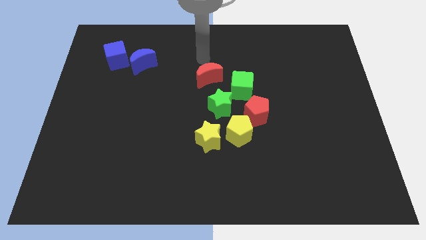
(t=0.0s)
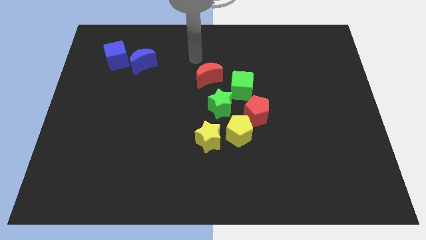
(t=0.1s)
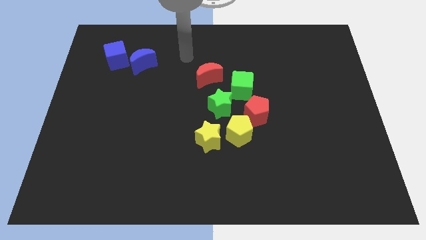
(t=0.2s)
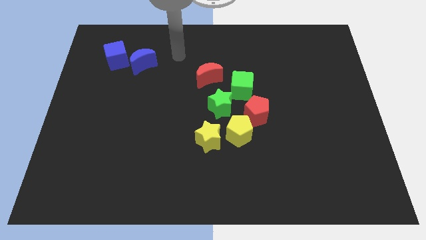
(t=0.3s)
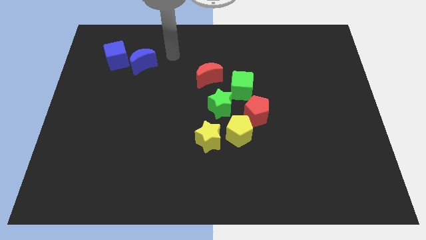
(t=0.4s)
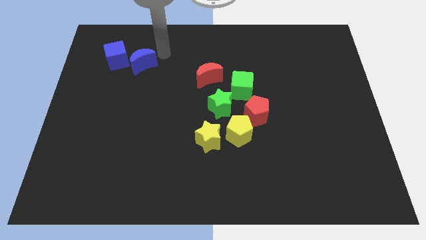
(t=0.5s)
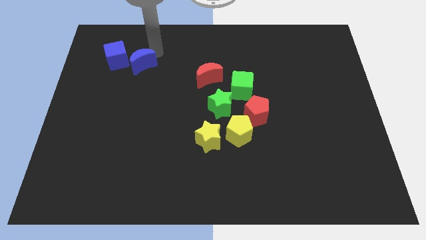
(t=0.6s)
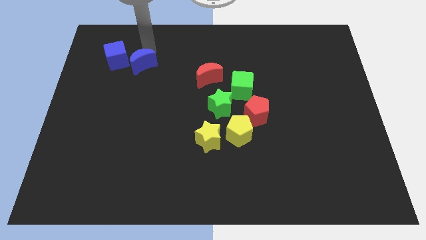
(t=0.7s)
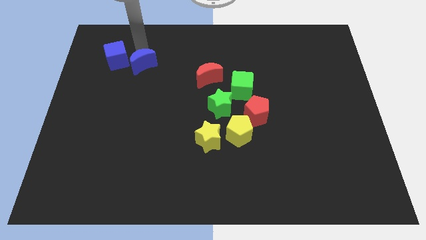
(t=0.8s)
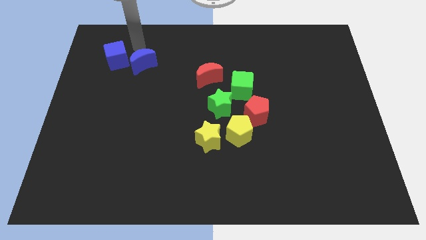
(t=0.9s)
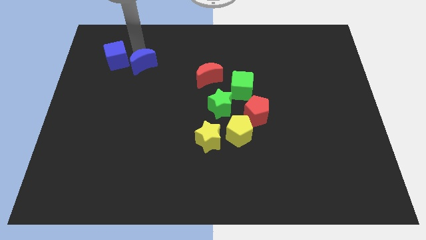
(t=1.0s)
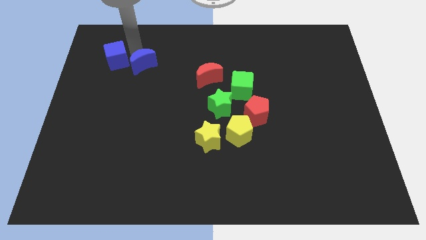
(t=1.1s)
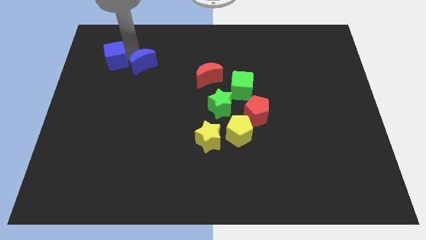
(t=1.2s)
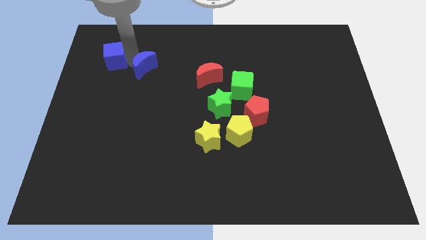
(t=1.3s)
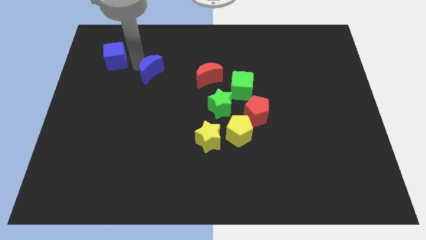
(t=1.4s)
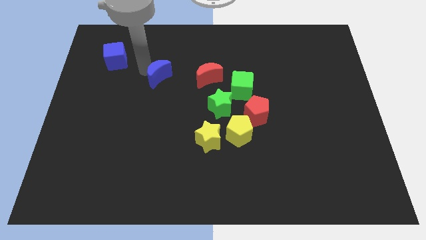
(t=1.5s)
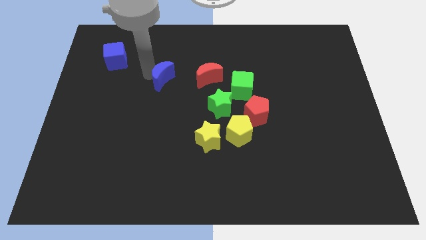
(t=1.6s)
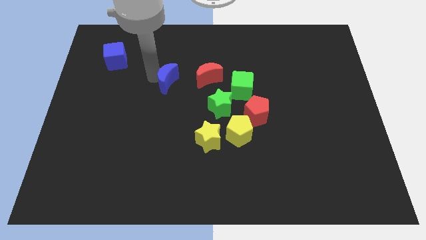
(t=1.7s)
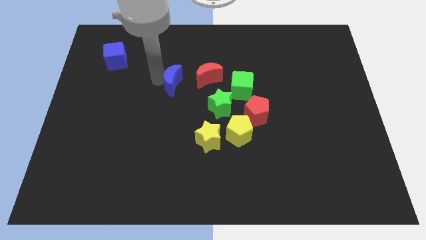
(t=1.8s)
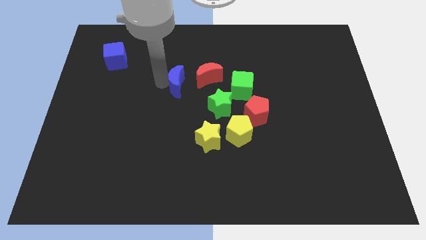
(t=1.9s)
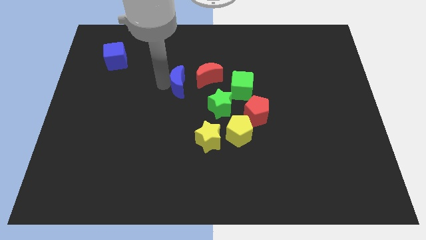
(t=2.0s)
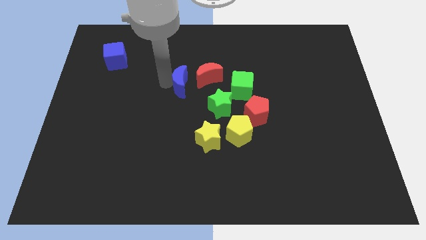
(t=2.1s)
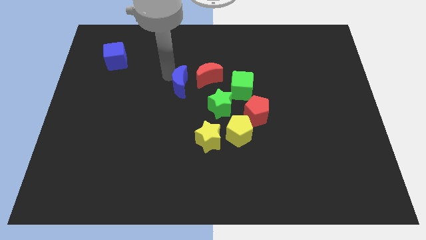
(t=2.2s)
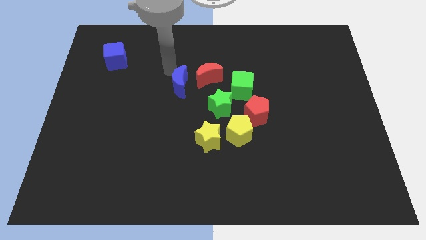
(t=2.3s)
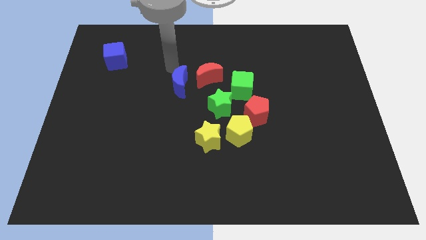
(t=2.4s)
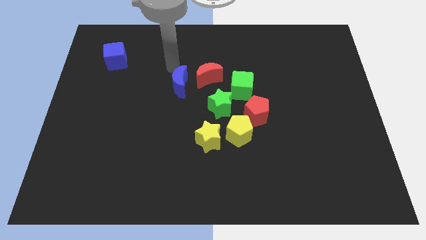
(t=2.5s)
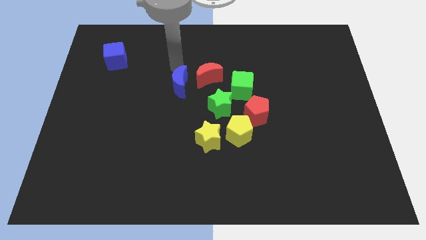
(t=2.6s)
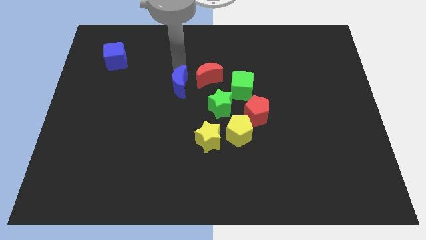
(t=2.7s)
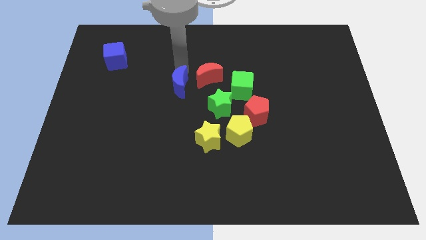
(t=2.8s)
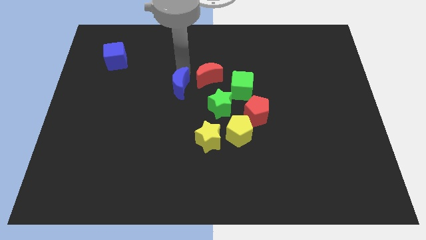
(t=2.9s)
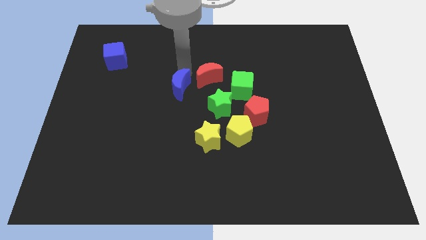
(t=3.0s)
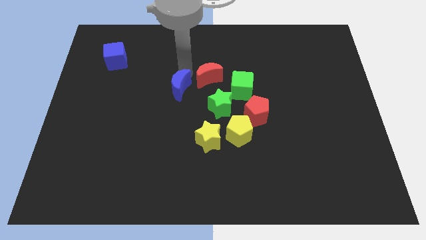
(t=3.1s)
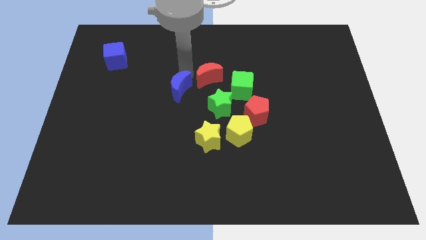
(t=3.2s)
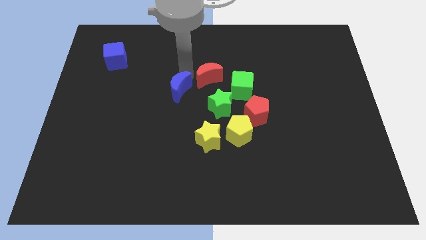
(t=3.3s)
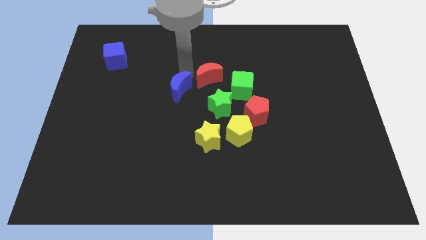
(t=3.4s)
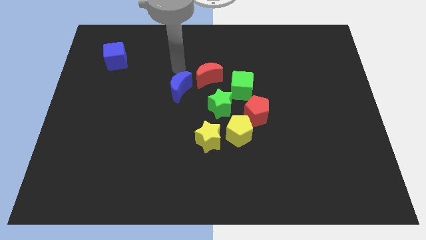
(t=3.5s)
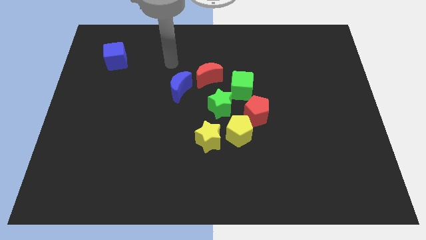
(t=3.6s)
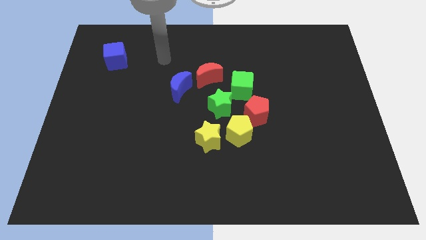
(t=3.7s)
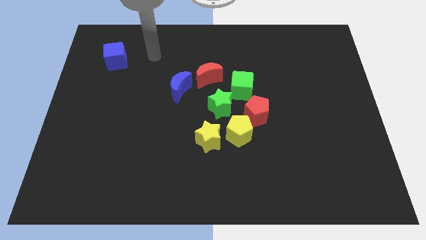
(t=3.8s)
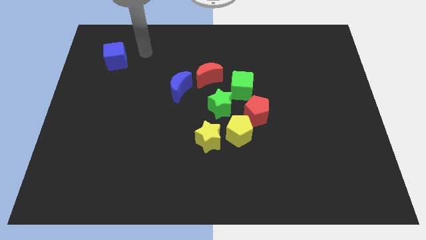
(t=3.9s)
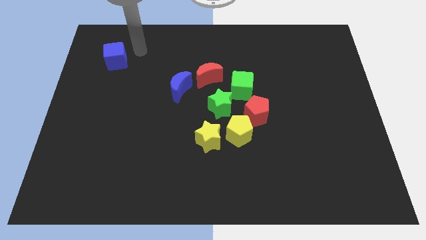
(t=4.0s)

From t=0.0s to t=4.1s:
push the blue moon diagonally towards green star

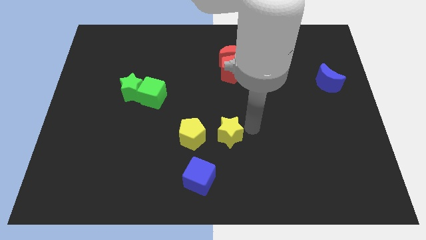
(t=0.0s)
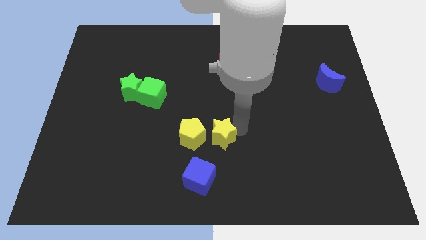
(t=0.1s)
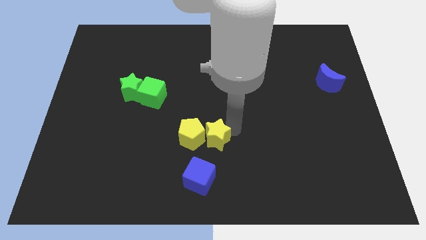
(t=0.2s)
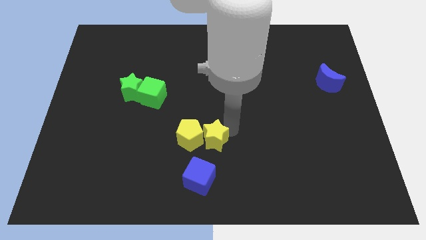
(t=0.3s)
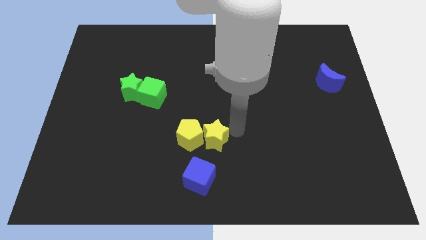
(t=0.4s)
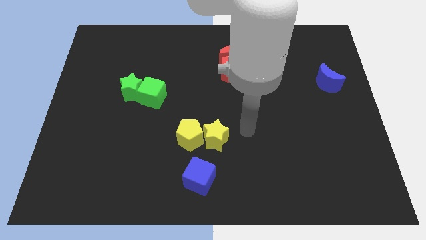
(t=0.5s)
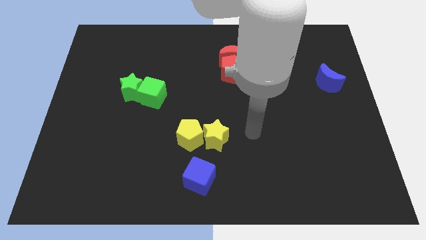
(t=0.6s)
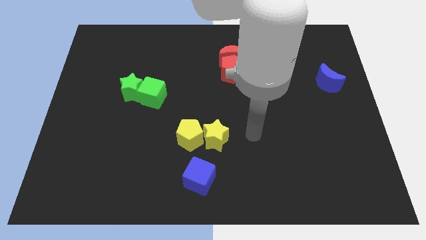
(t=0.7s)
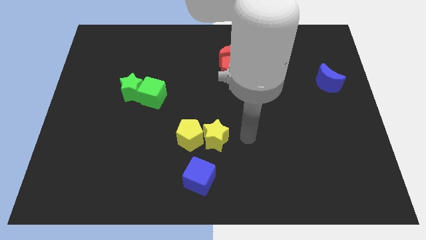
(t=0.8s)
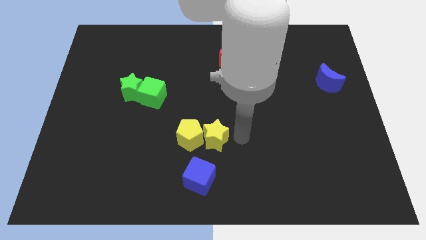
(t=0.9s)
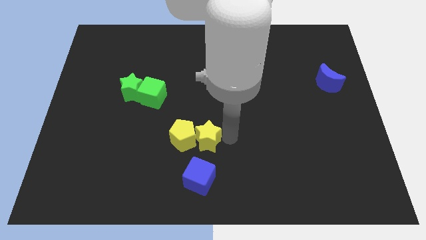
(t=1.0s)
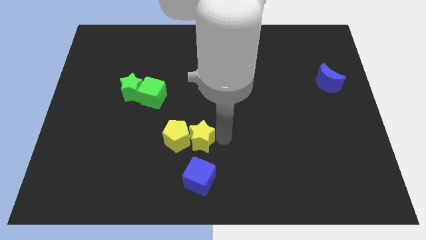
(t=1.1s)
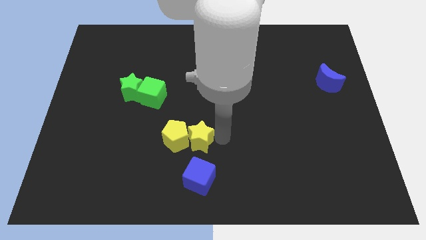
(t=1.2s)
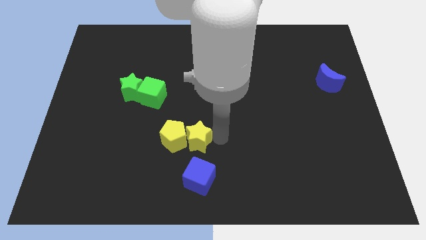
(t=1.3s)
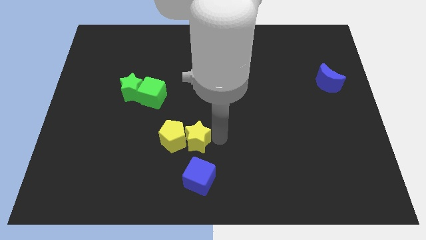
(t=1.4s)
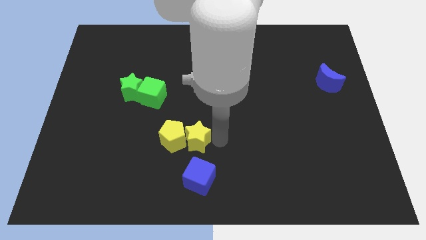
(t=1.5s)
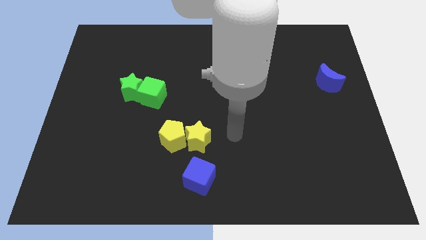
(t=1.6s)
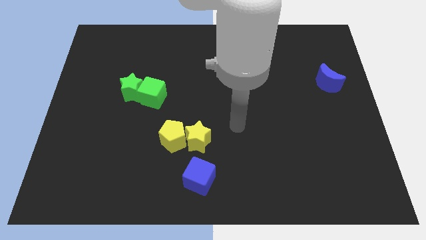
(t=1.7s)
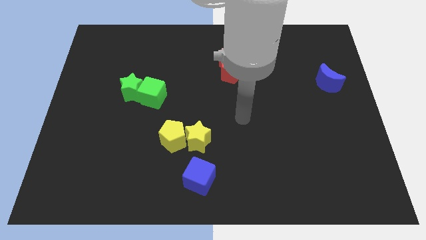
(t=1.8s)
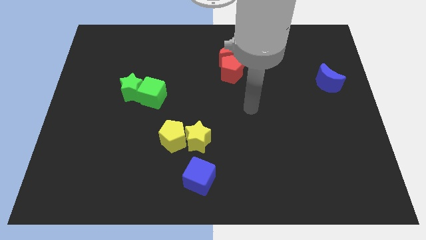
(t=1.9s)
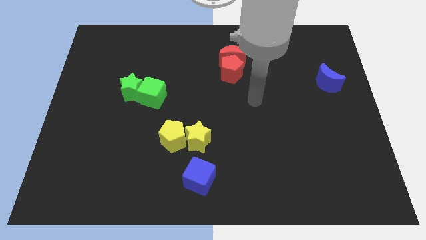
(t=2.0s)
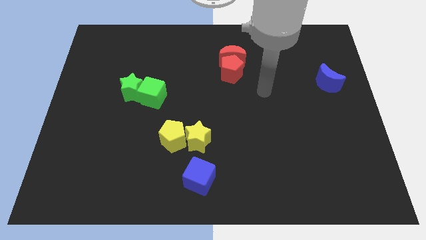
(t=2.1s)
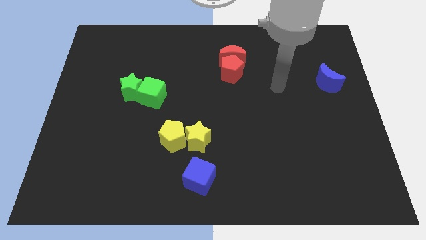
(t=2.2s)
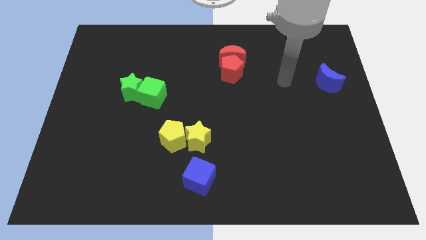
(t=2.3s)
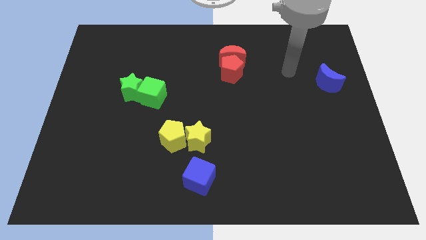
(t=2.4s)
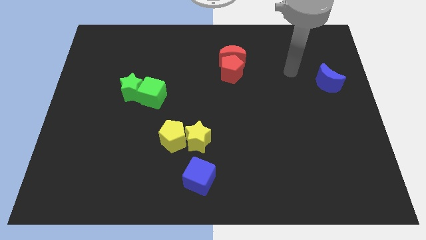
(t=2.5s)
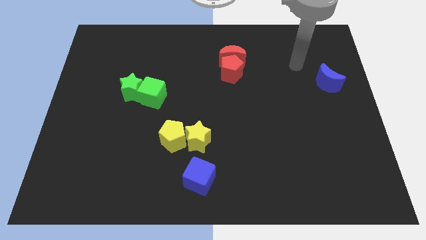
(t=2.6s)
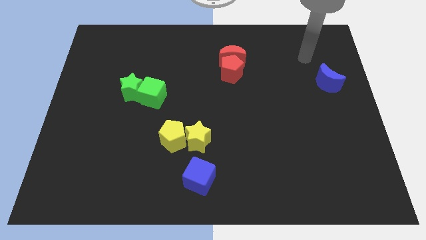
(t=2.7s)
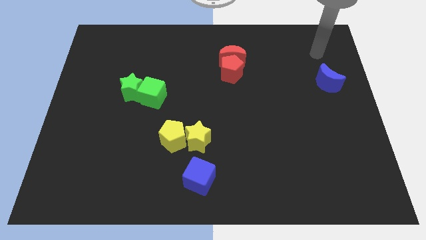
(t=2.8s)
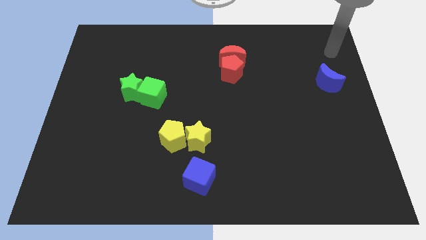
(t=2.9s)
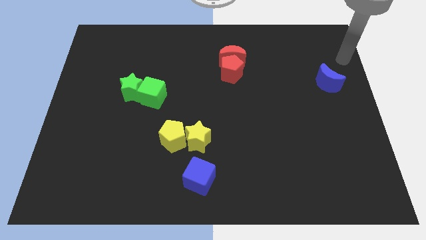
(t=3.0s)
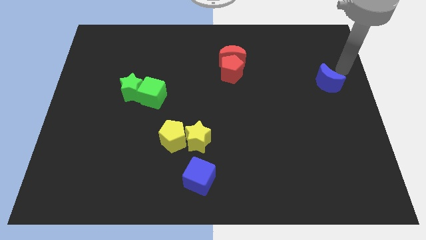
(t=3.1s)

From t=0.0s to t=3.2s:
place both the yellow blocks diagonally on the bottom right side of the green blocks

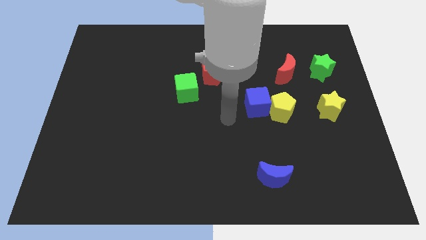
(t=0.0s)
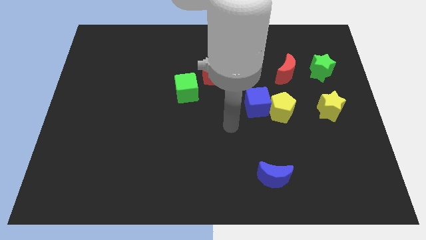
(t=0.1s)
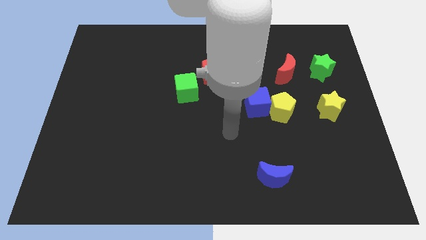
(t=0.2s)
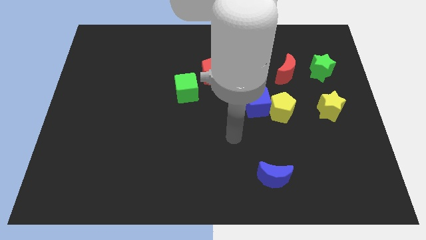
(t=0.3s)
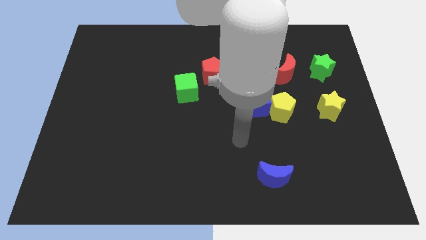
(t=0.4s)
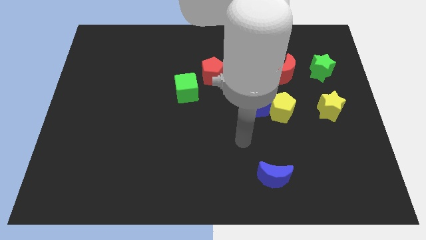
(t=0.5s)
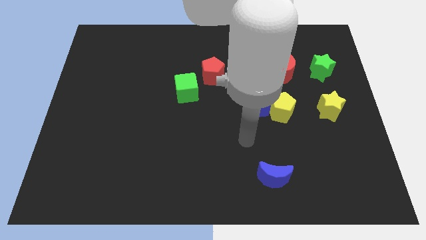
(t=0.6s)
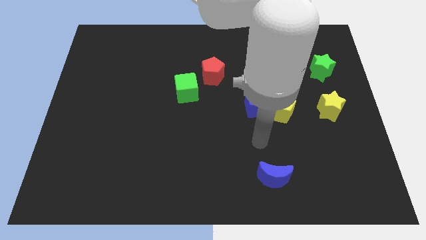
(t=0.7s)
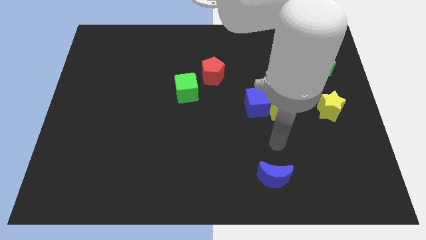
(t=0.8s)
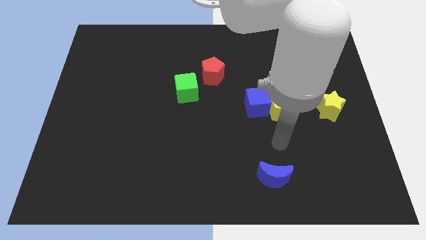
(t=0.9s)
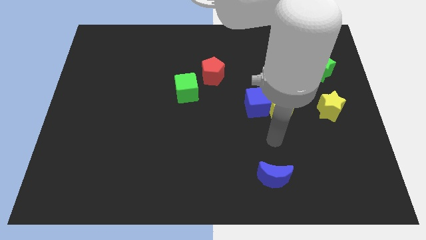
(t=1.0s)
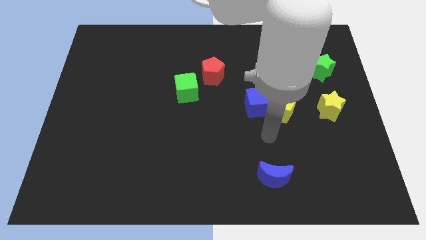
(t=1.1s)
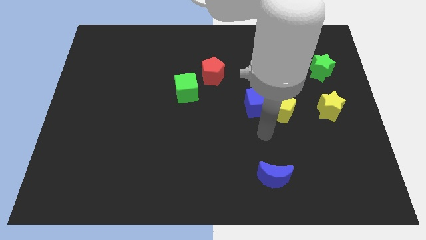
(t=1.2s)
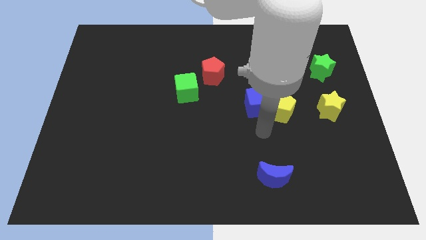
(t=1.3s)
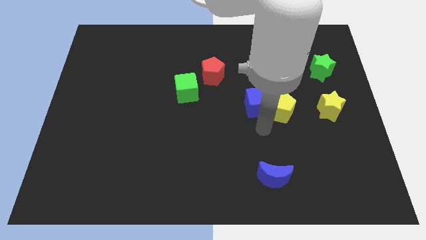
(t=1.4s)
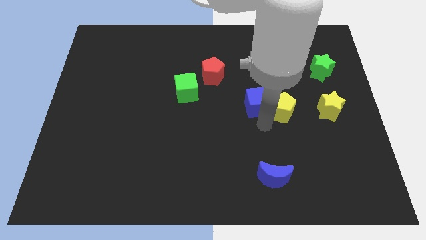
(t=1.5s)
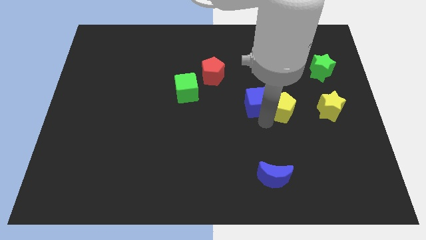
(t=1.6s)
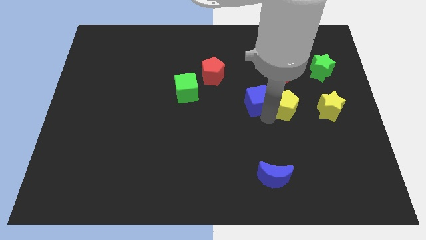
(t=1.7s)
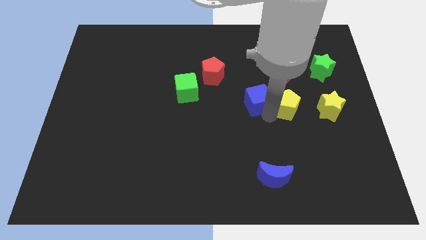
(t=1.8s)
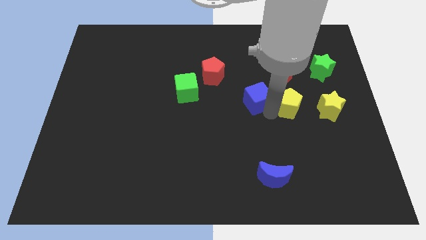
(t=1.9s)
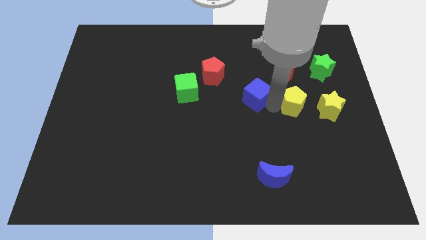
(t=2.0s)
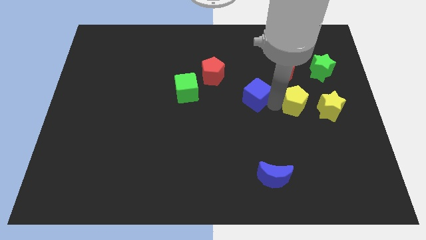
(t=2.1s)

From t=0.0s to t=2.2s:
place your hand in between the yellow pentagon and blue cube
